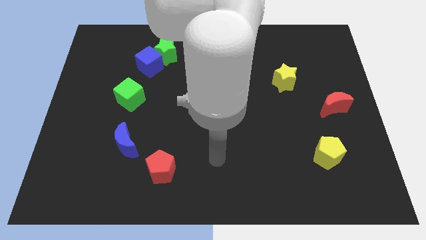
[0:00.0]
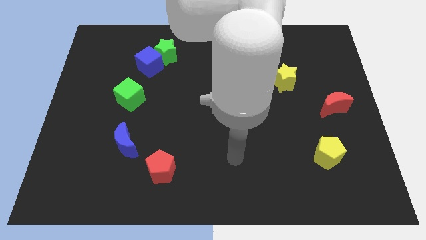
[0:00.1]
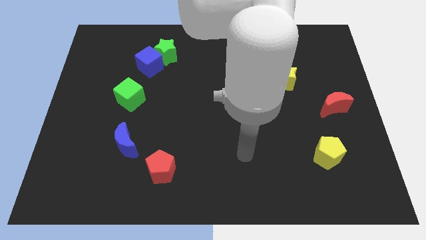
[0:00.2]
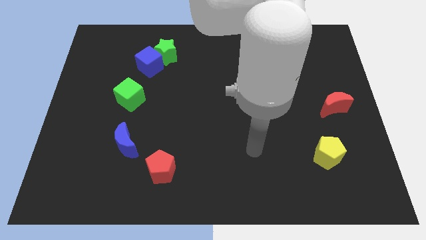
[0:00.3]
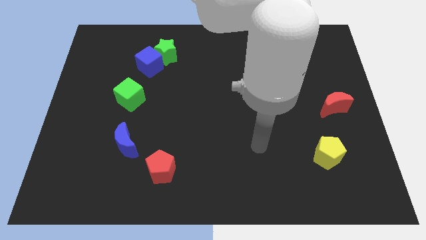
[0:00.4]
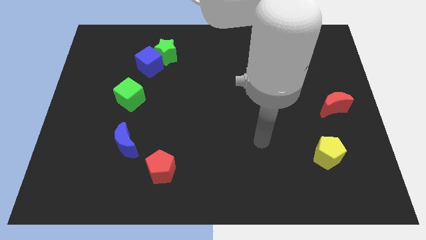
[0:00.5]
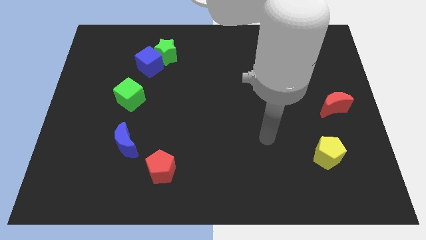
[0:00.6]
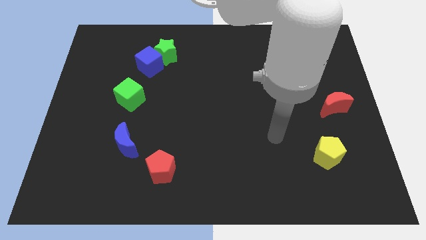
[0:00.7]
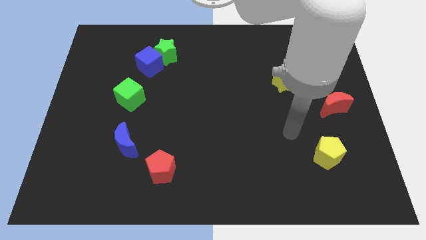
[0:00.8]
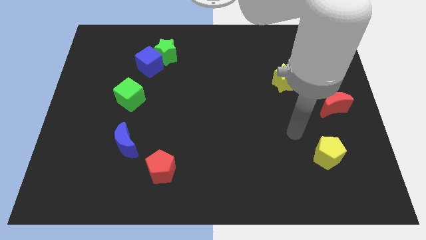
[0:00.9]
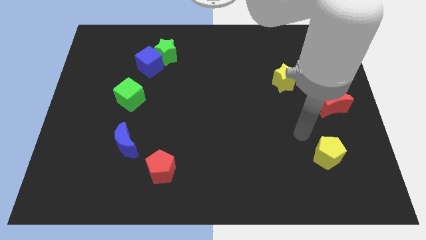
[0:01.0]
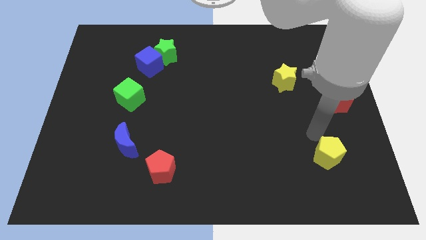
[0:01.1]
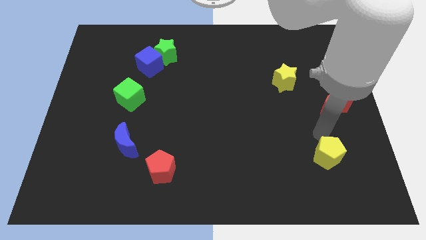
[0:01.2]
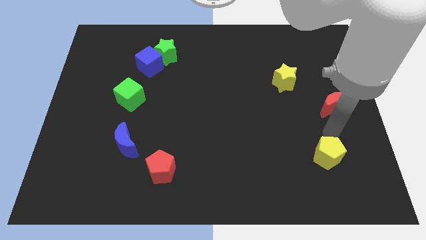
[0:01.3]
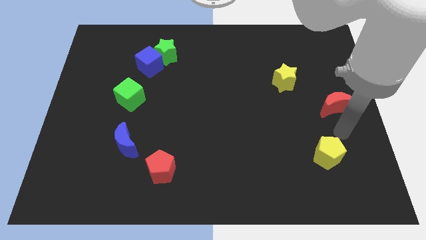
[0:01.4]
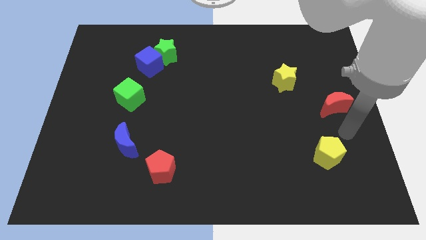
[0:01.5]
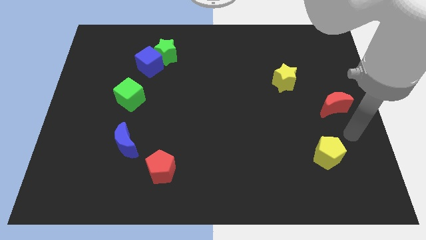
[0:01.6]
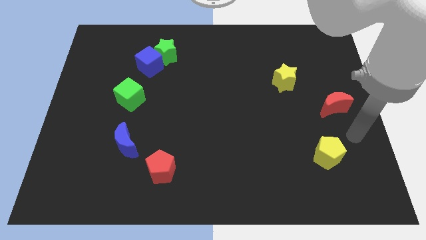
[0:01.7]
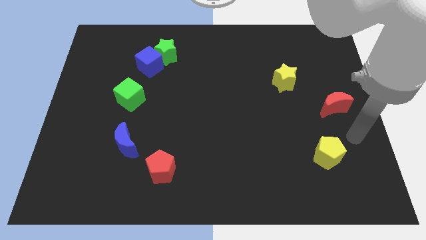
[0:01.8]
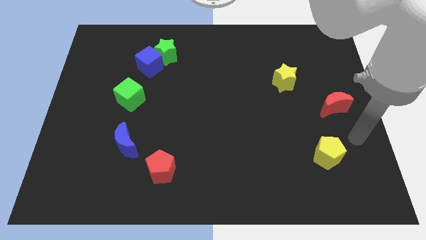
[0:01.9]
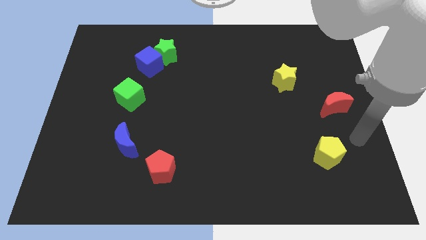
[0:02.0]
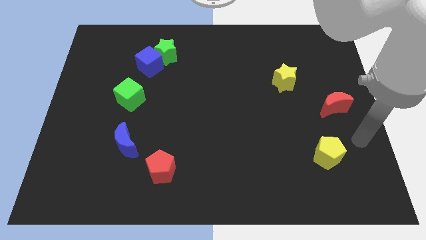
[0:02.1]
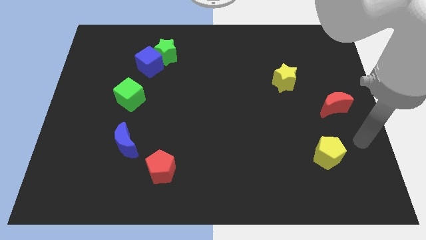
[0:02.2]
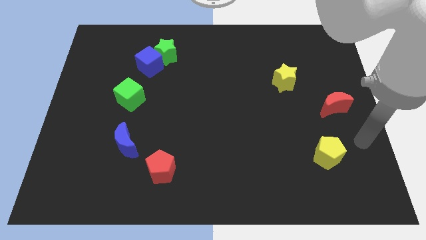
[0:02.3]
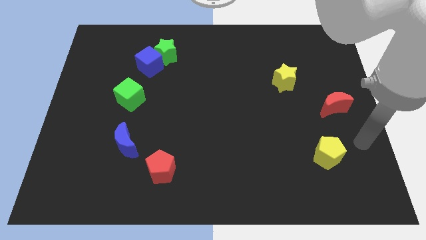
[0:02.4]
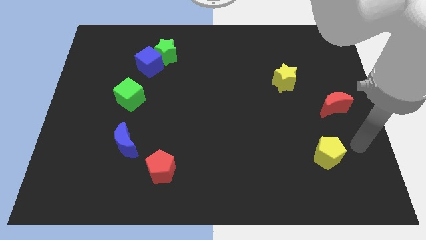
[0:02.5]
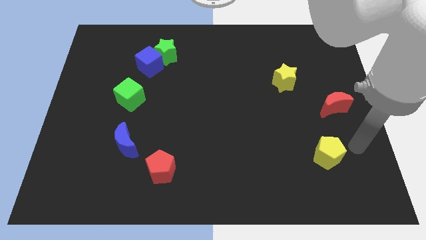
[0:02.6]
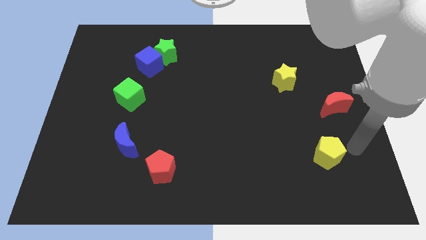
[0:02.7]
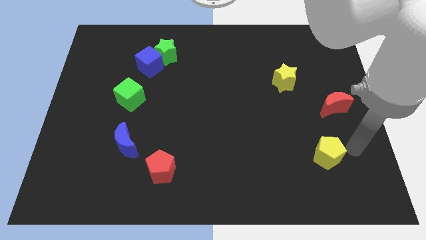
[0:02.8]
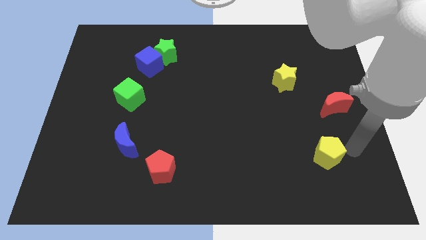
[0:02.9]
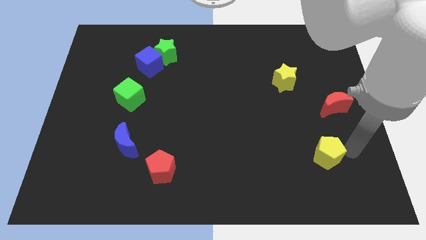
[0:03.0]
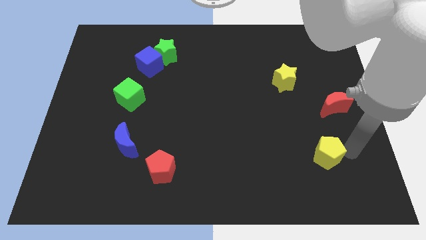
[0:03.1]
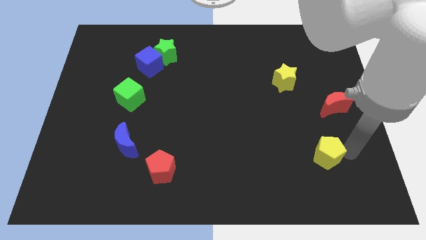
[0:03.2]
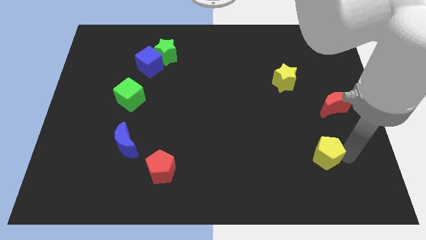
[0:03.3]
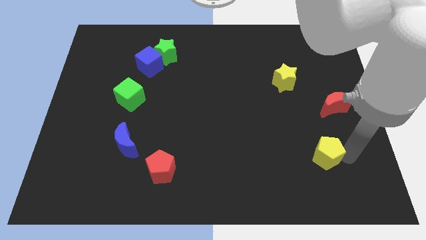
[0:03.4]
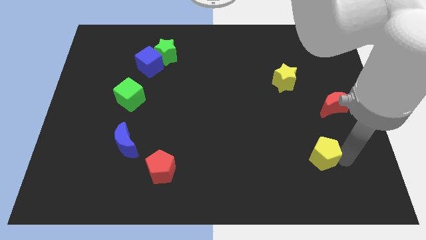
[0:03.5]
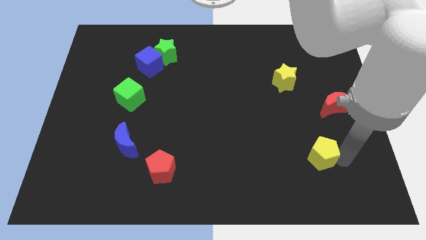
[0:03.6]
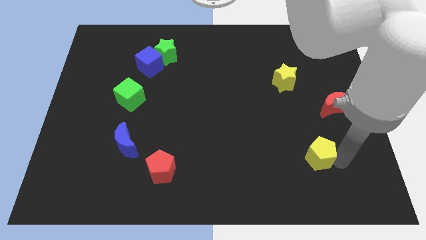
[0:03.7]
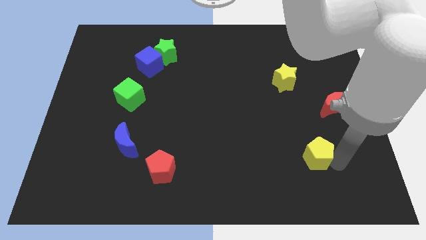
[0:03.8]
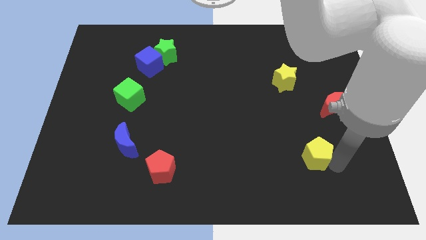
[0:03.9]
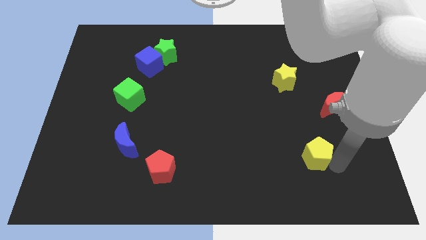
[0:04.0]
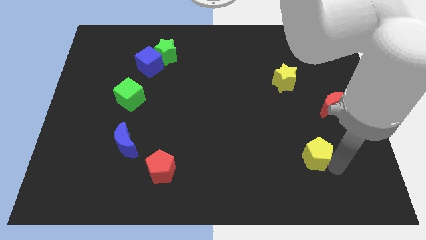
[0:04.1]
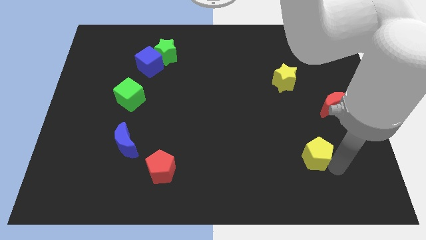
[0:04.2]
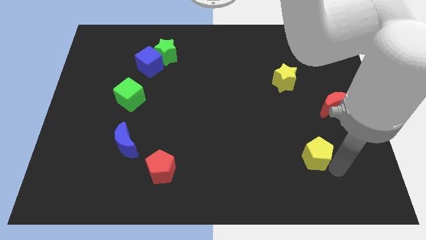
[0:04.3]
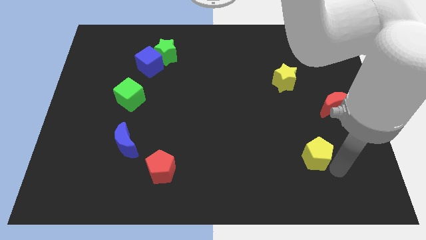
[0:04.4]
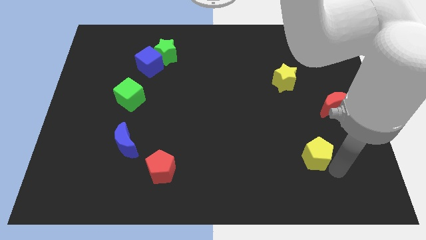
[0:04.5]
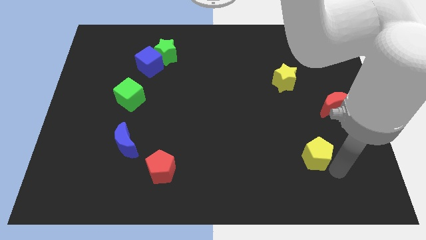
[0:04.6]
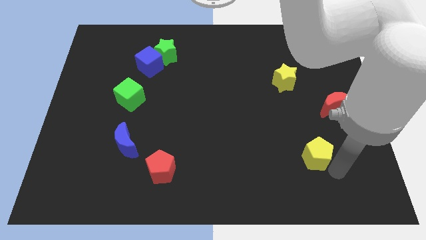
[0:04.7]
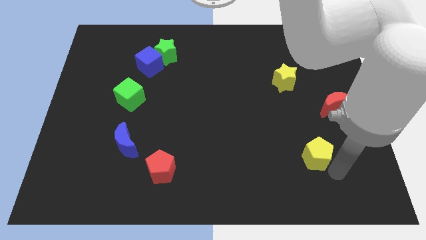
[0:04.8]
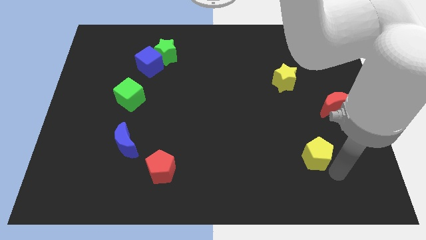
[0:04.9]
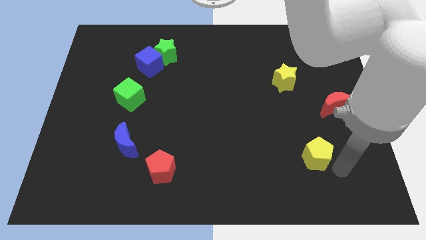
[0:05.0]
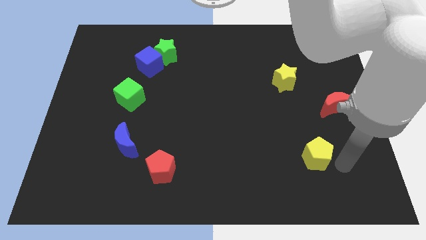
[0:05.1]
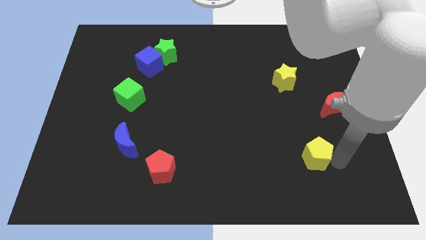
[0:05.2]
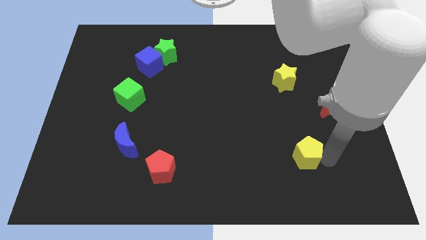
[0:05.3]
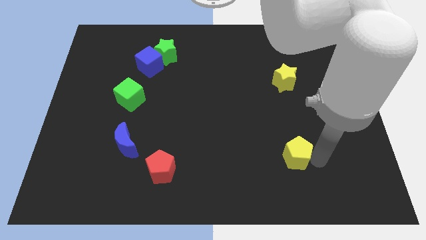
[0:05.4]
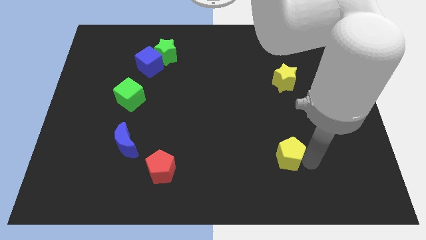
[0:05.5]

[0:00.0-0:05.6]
place the yellow pentagon below the yellow star

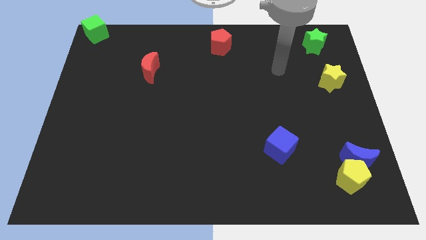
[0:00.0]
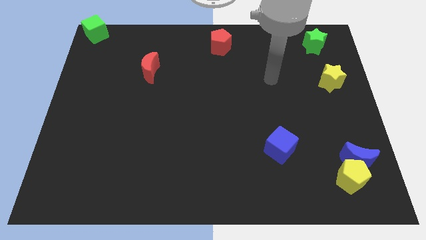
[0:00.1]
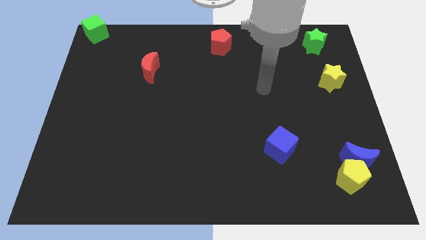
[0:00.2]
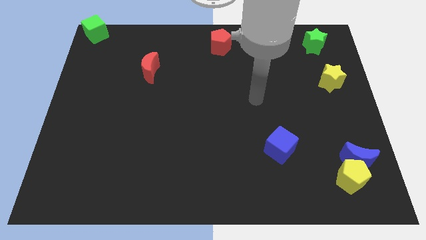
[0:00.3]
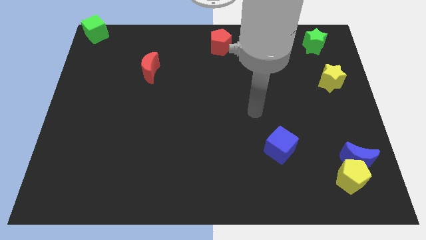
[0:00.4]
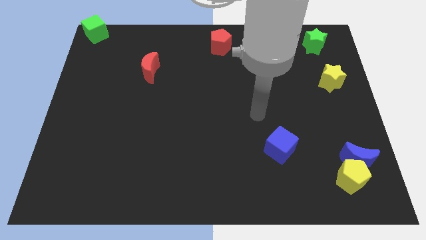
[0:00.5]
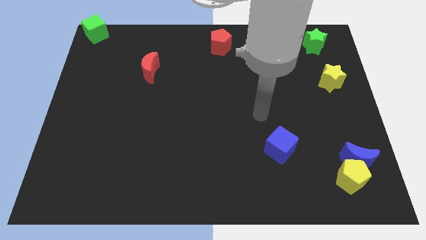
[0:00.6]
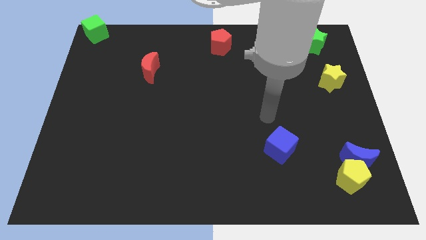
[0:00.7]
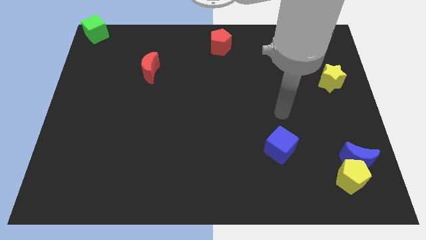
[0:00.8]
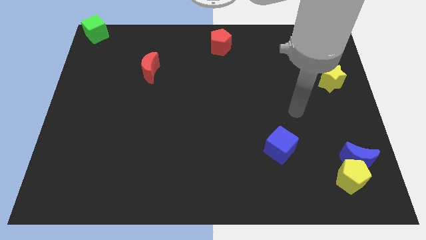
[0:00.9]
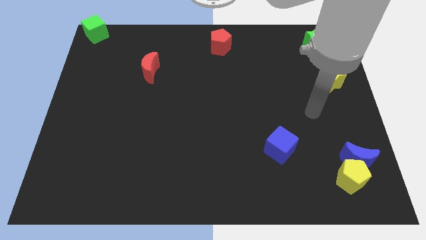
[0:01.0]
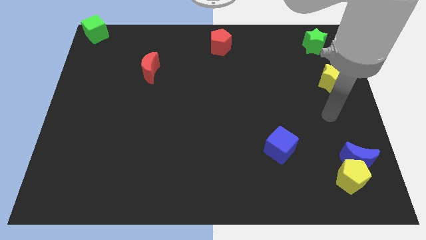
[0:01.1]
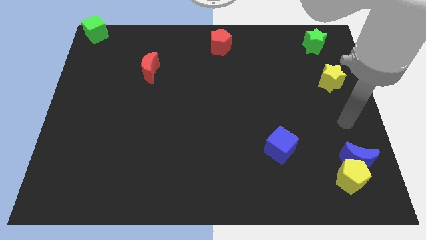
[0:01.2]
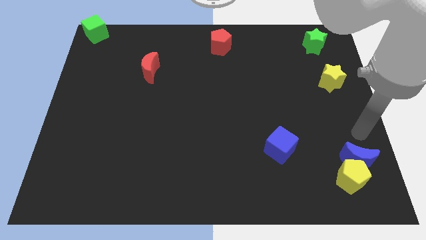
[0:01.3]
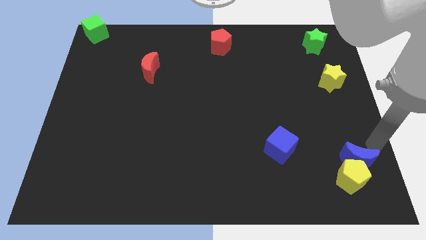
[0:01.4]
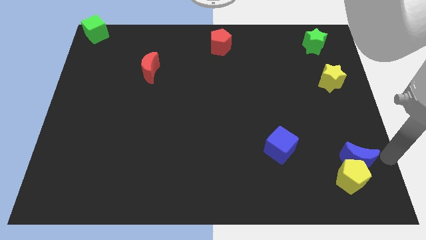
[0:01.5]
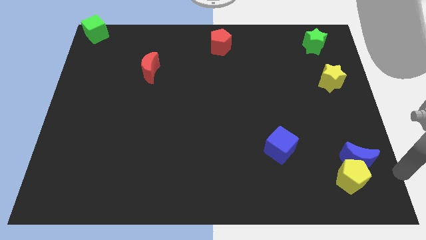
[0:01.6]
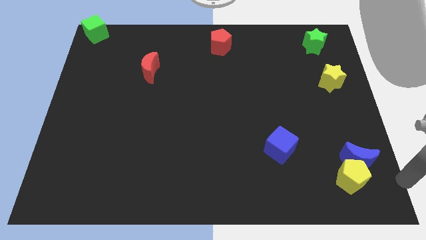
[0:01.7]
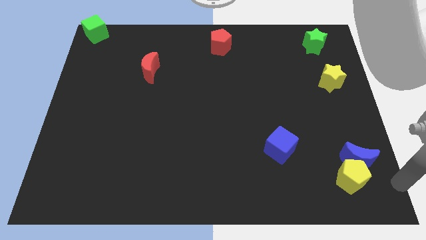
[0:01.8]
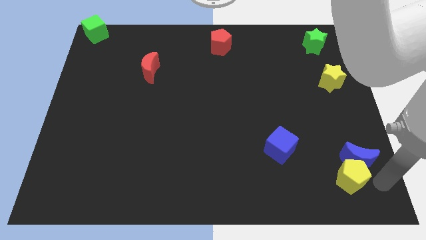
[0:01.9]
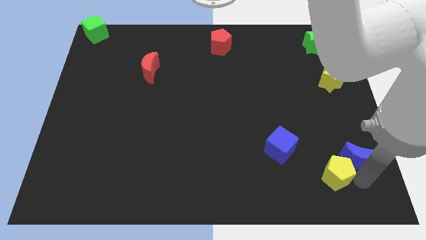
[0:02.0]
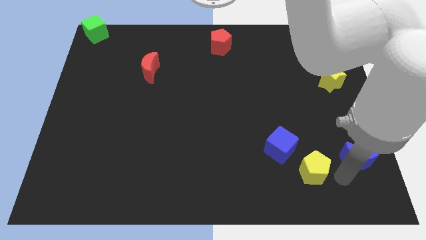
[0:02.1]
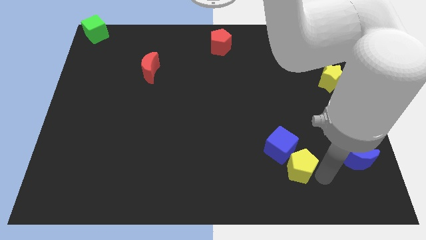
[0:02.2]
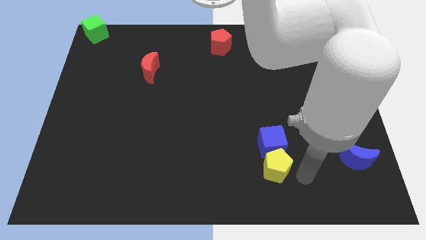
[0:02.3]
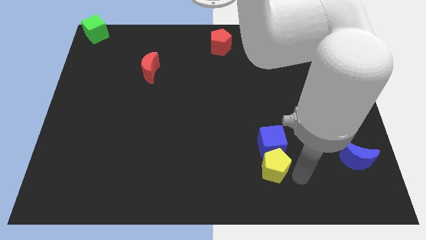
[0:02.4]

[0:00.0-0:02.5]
push the yellow pentagon towards the blue cube

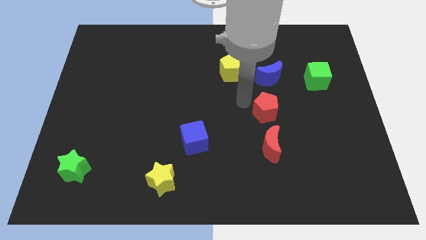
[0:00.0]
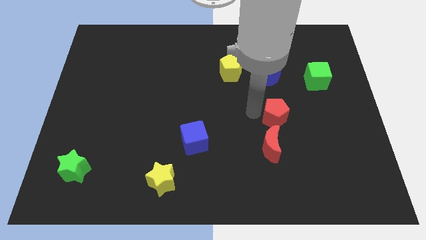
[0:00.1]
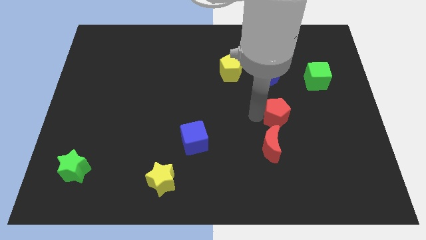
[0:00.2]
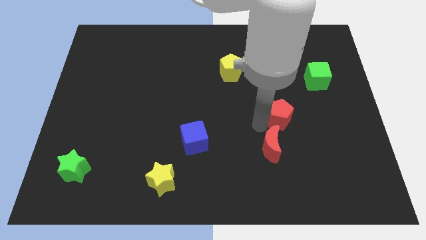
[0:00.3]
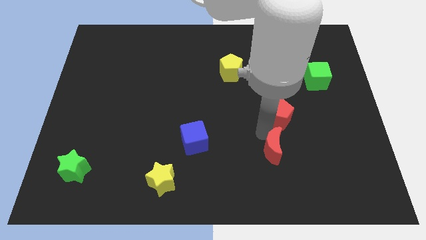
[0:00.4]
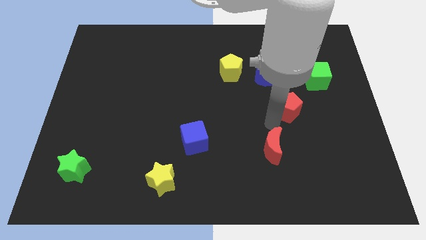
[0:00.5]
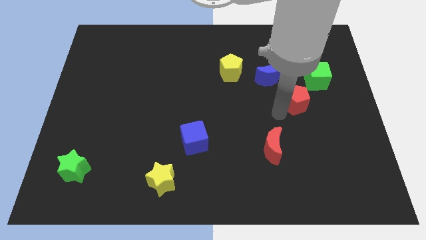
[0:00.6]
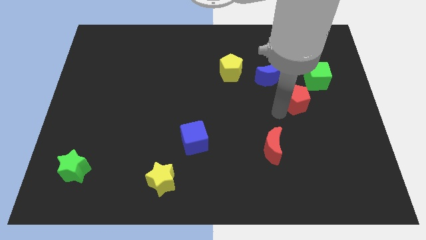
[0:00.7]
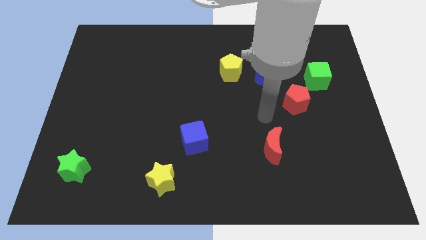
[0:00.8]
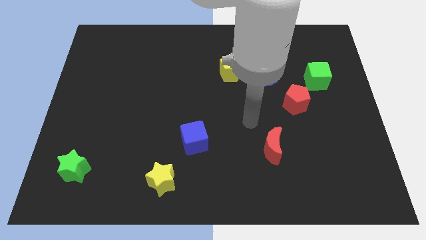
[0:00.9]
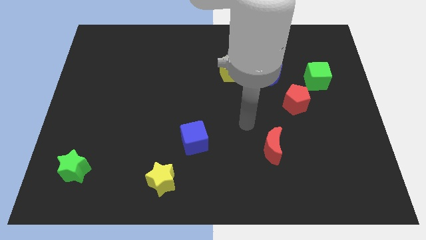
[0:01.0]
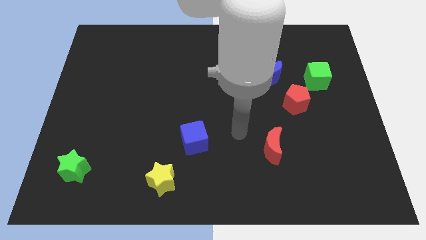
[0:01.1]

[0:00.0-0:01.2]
place the red pentagon at the bottom left of the green cube
